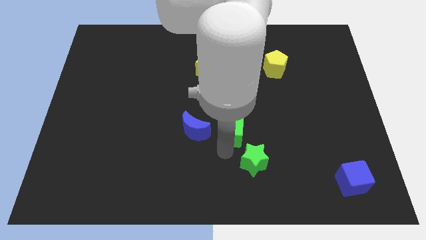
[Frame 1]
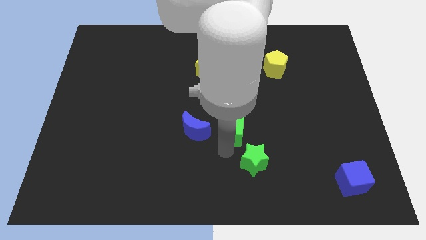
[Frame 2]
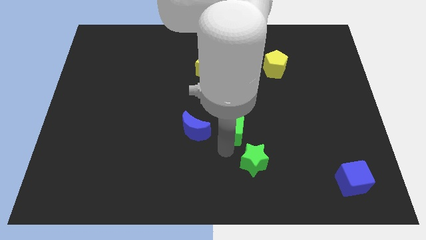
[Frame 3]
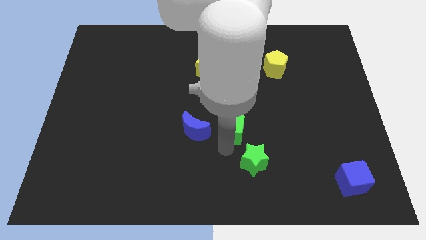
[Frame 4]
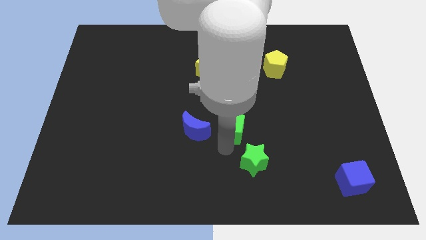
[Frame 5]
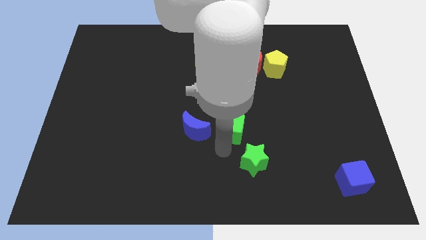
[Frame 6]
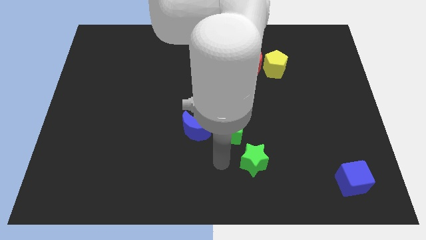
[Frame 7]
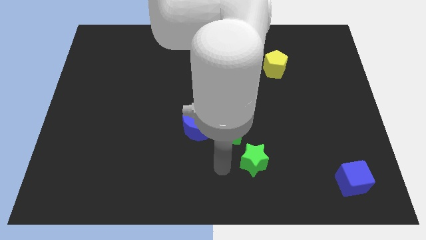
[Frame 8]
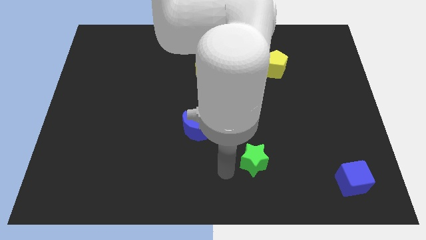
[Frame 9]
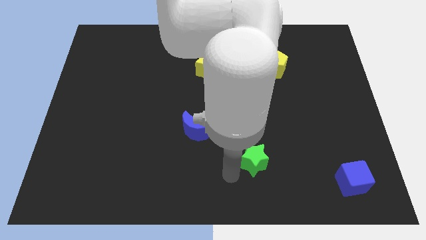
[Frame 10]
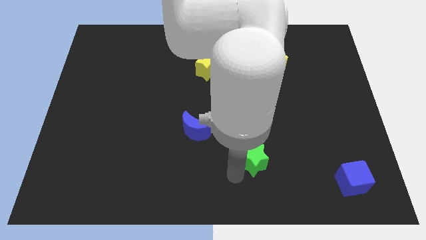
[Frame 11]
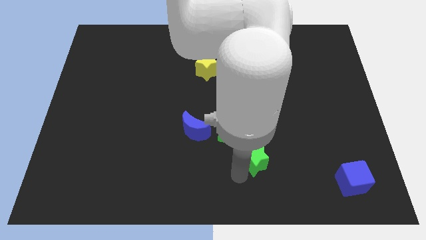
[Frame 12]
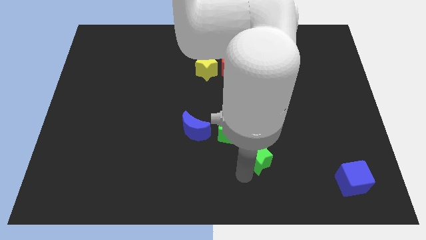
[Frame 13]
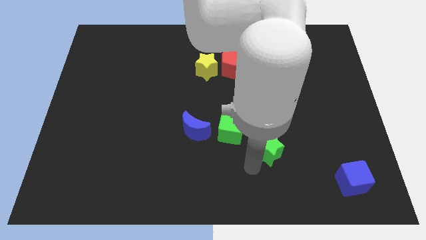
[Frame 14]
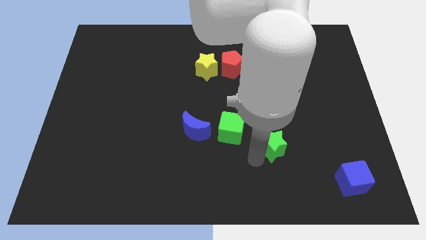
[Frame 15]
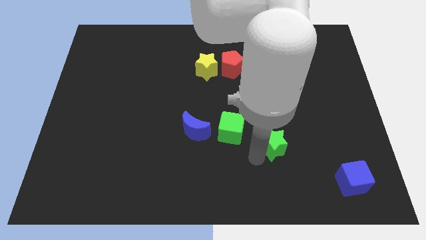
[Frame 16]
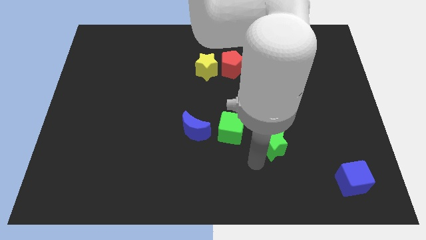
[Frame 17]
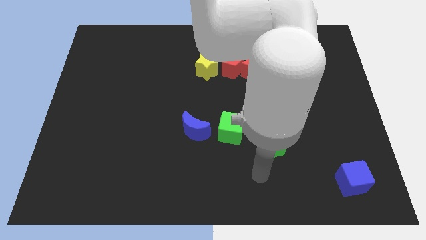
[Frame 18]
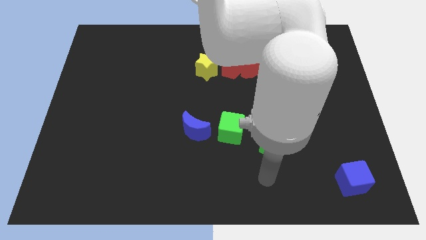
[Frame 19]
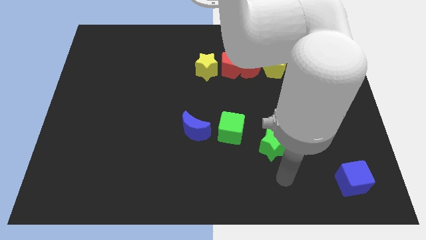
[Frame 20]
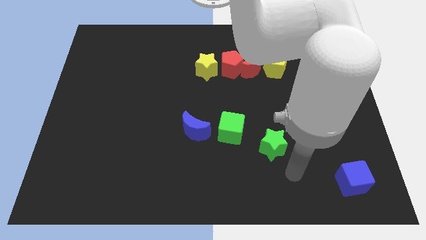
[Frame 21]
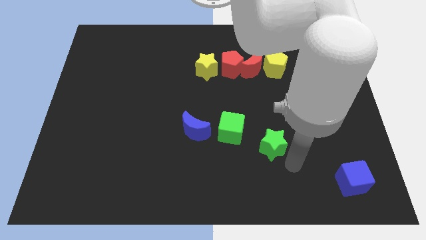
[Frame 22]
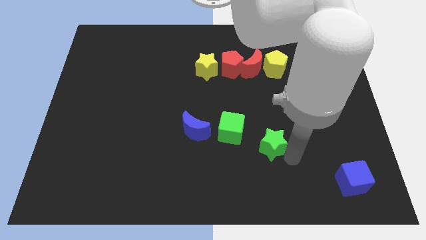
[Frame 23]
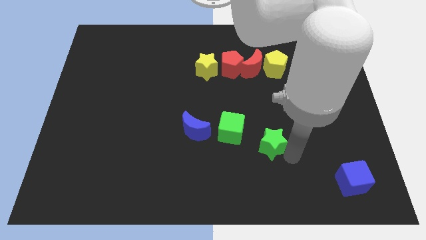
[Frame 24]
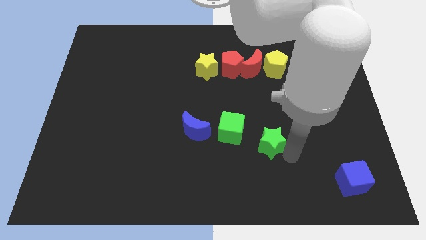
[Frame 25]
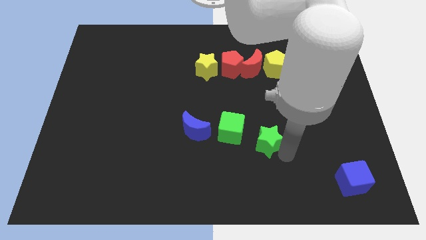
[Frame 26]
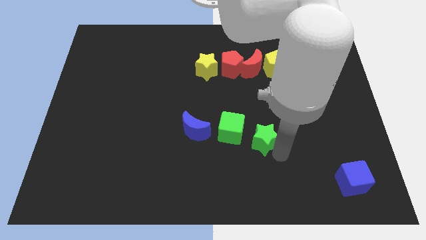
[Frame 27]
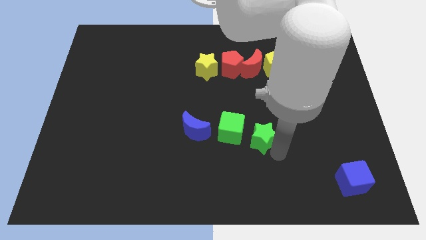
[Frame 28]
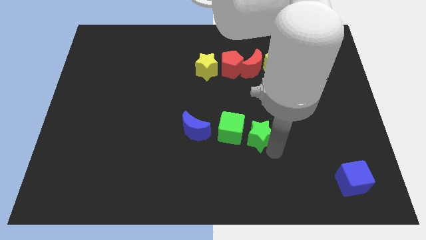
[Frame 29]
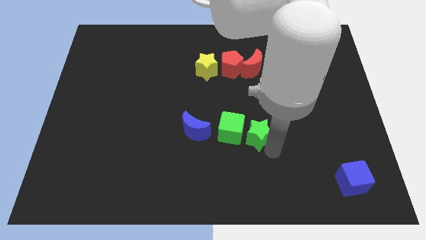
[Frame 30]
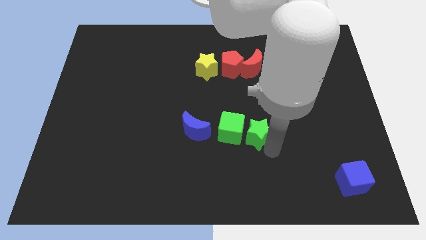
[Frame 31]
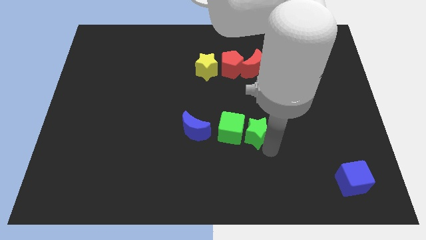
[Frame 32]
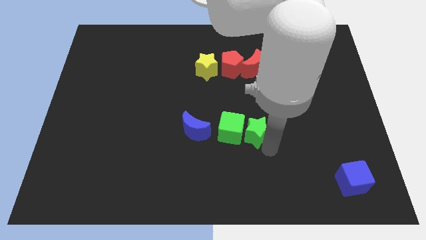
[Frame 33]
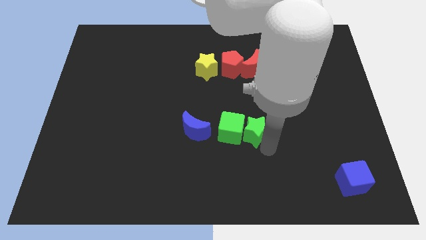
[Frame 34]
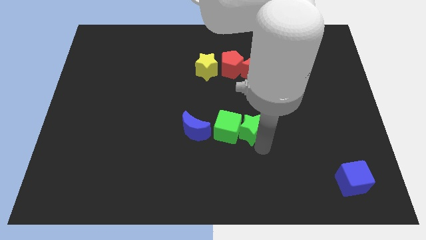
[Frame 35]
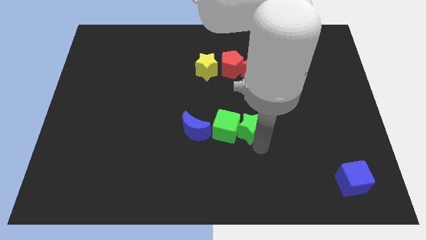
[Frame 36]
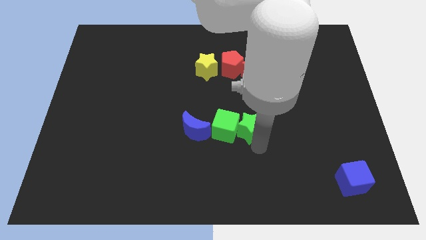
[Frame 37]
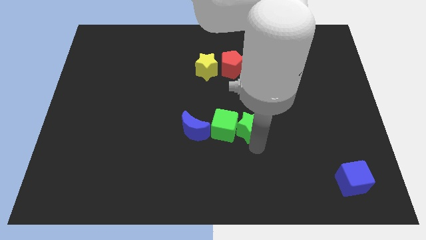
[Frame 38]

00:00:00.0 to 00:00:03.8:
make a horizontal line with the green blocks and blue crescent

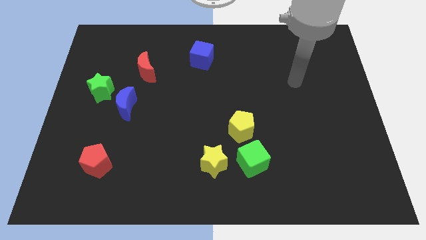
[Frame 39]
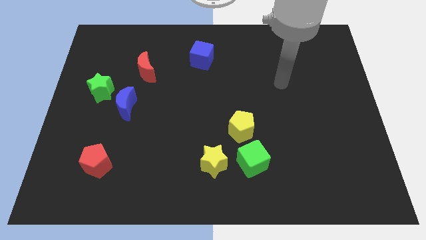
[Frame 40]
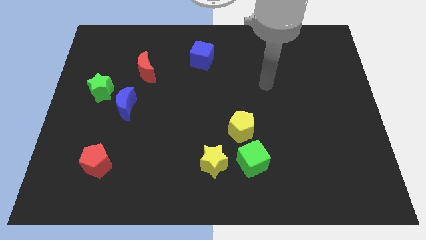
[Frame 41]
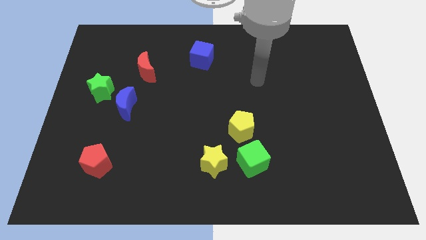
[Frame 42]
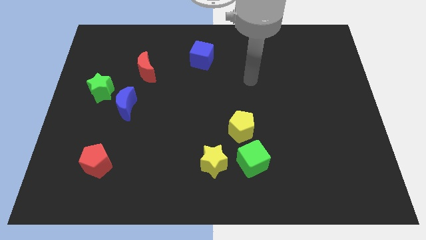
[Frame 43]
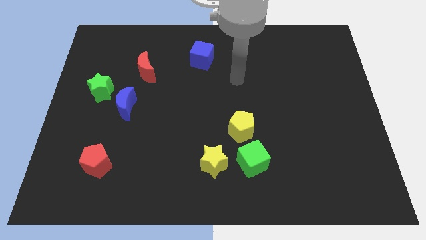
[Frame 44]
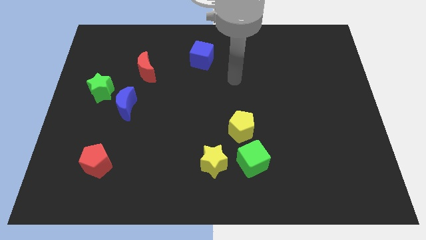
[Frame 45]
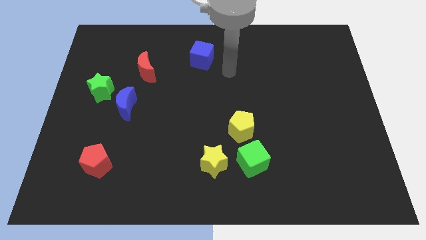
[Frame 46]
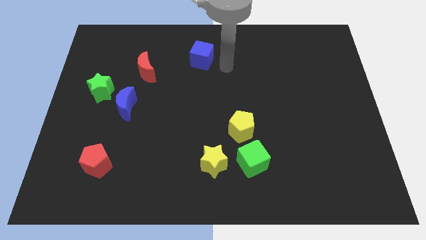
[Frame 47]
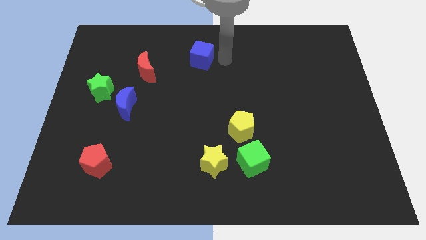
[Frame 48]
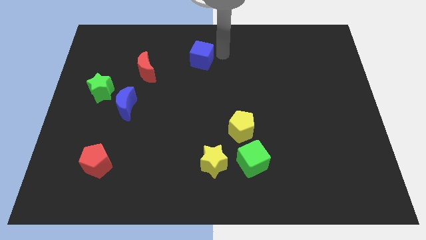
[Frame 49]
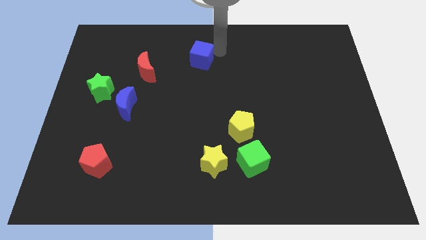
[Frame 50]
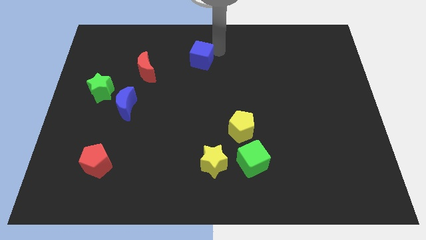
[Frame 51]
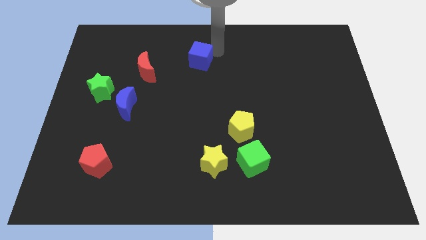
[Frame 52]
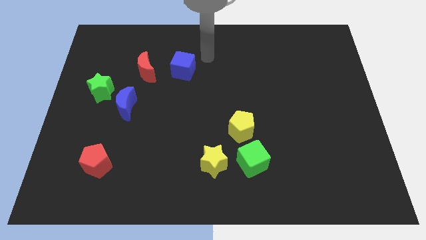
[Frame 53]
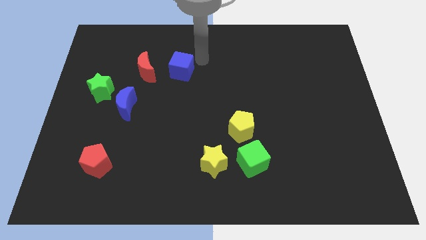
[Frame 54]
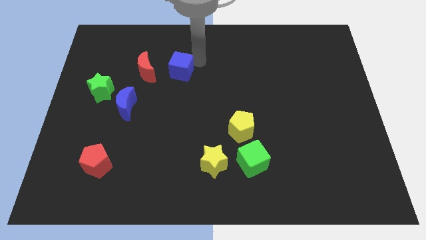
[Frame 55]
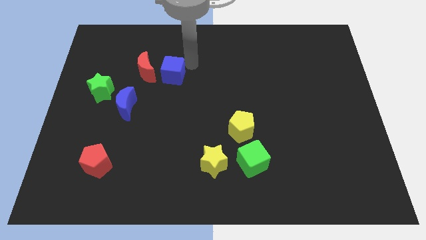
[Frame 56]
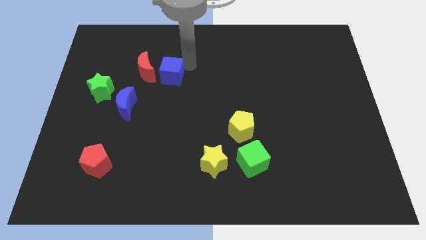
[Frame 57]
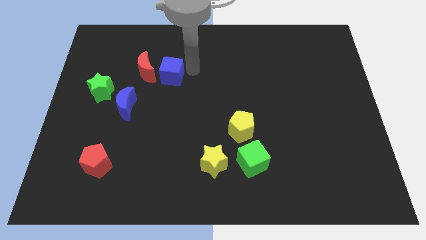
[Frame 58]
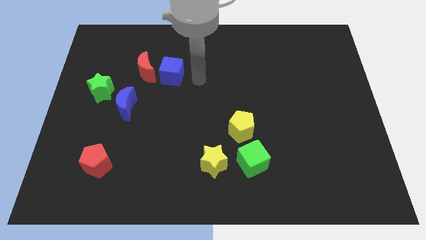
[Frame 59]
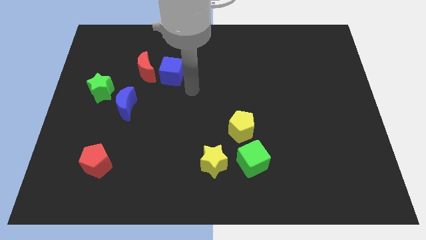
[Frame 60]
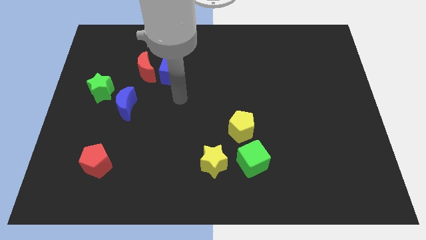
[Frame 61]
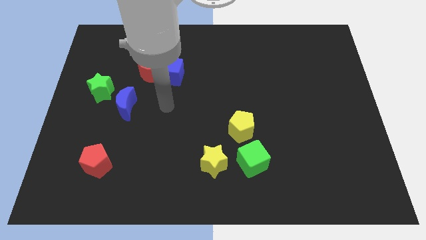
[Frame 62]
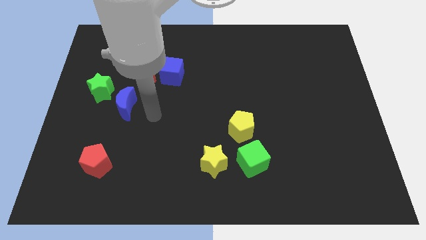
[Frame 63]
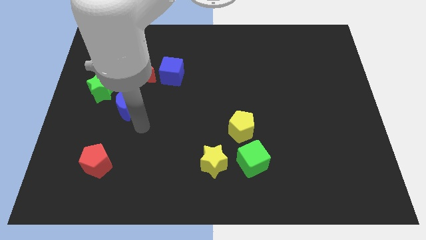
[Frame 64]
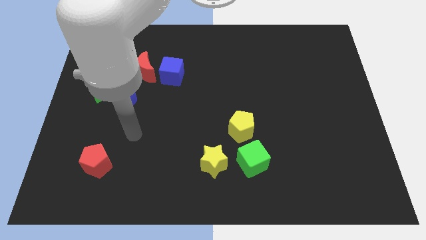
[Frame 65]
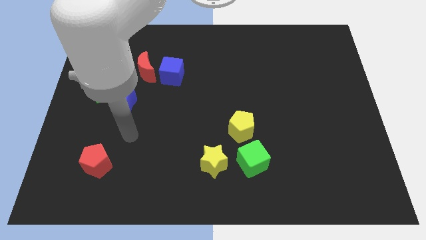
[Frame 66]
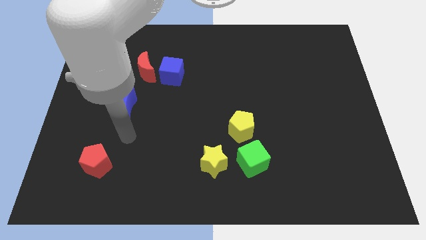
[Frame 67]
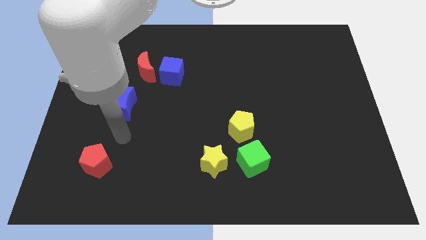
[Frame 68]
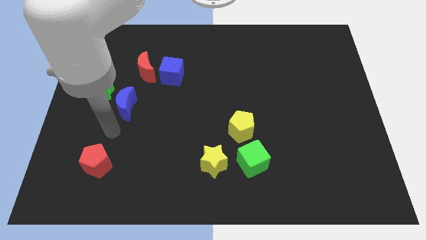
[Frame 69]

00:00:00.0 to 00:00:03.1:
place your arm below blue moon

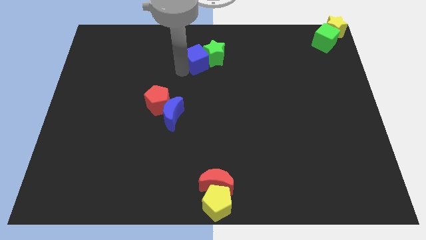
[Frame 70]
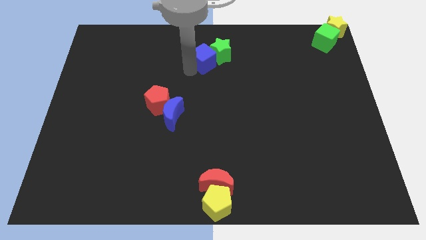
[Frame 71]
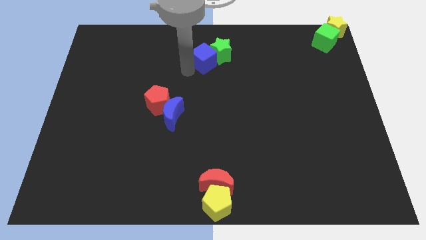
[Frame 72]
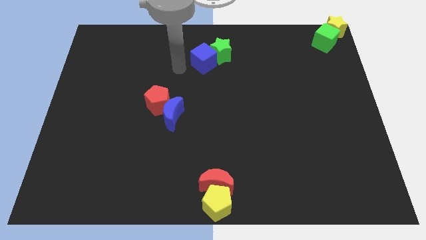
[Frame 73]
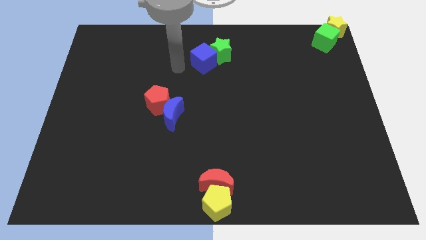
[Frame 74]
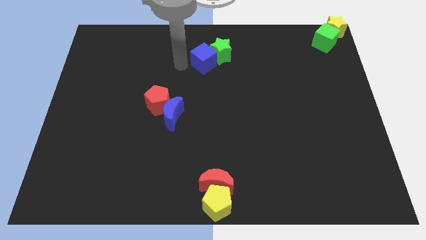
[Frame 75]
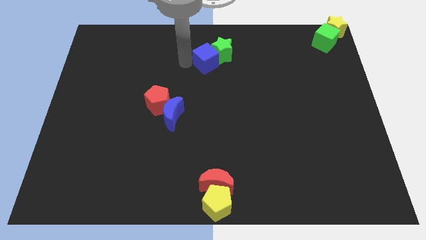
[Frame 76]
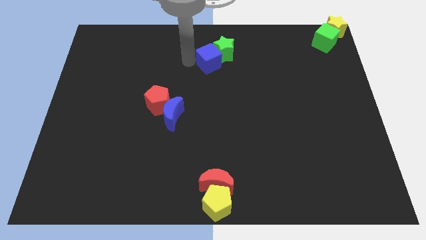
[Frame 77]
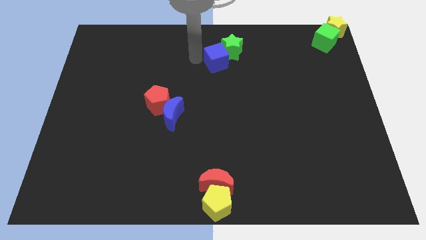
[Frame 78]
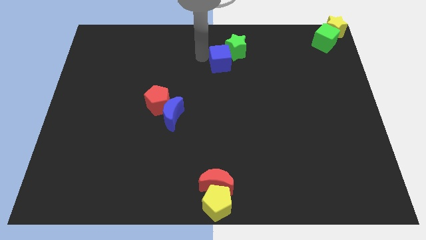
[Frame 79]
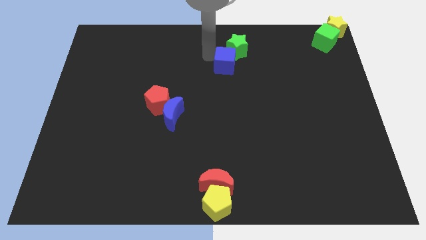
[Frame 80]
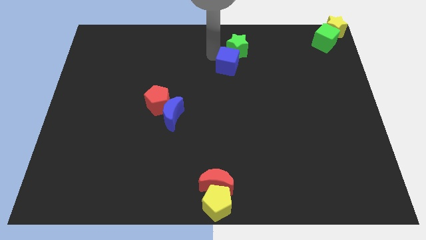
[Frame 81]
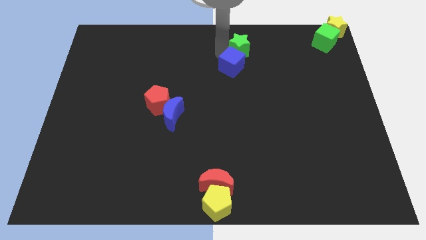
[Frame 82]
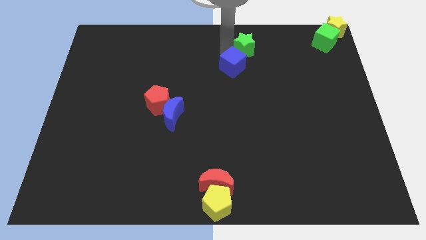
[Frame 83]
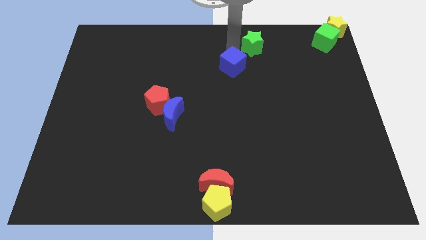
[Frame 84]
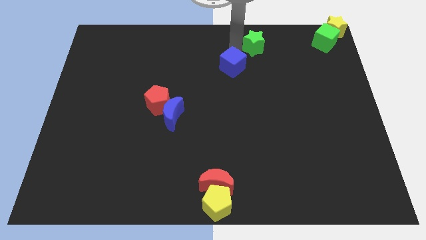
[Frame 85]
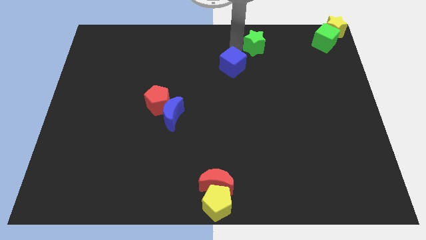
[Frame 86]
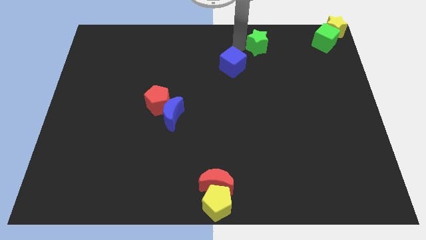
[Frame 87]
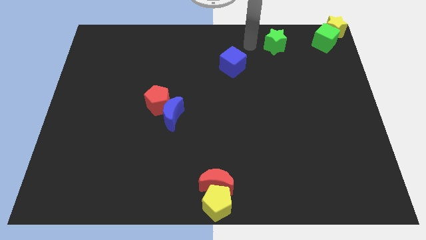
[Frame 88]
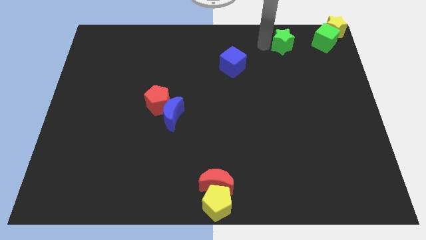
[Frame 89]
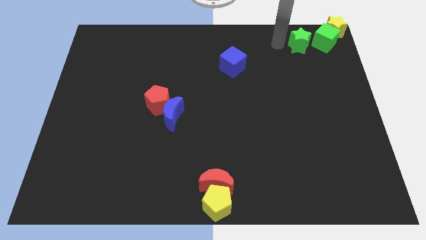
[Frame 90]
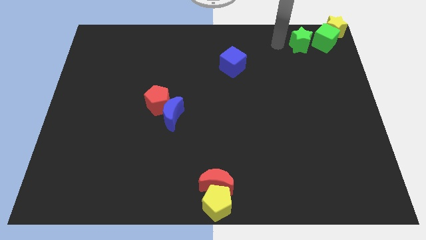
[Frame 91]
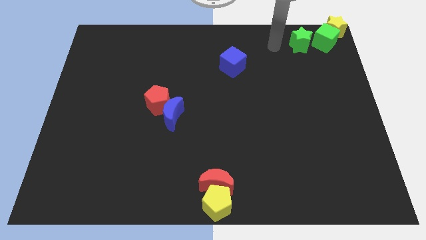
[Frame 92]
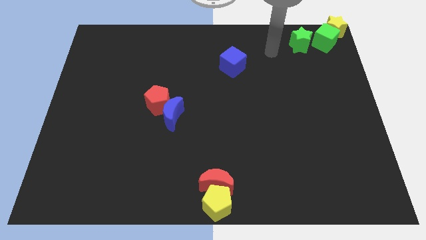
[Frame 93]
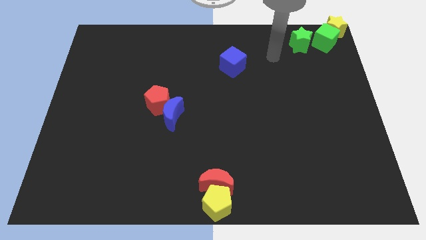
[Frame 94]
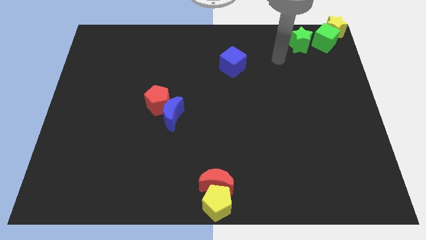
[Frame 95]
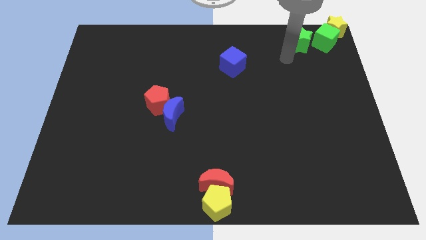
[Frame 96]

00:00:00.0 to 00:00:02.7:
separate the green stra from blue cube
